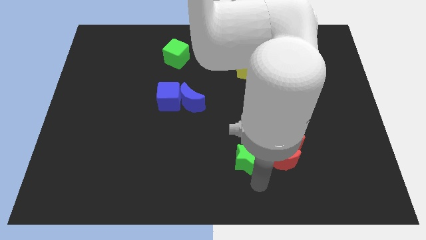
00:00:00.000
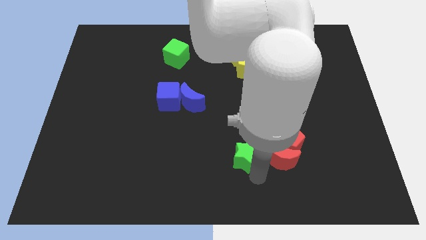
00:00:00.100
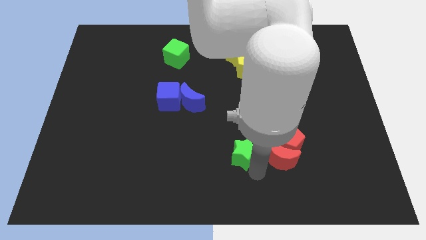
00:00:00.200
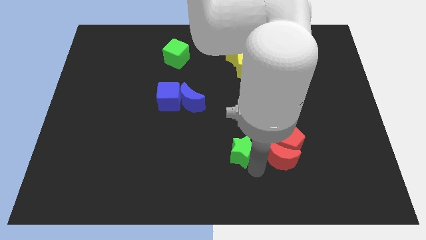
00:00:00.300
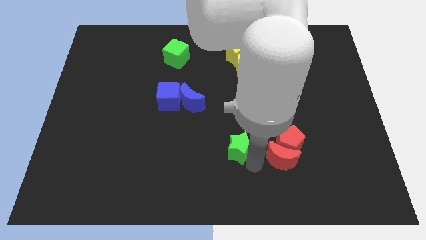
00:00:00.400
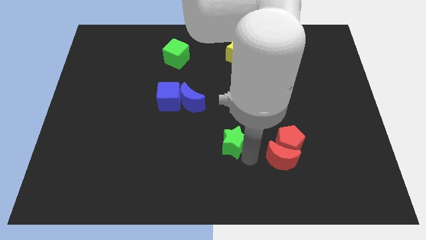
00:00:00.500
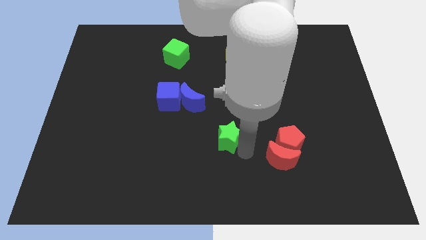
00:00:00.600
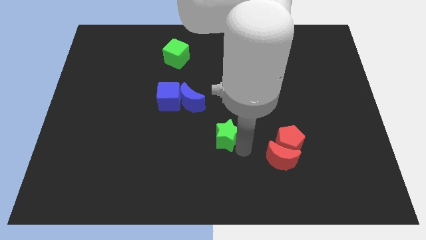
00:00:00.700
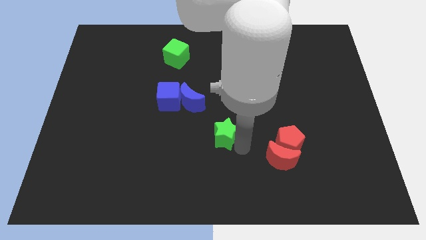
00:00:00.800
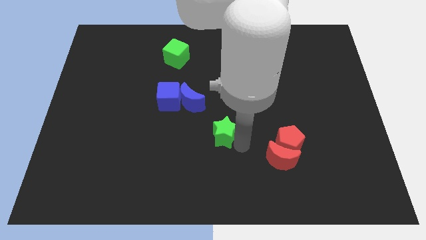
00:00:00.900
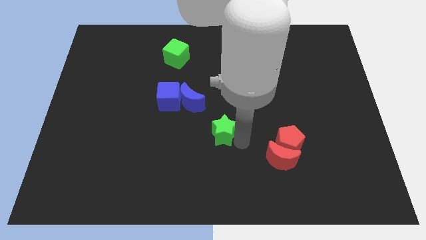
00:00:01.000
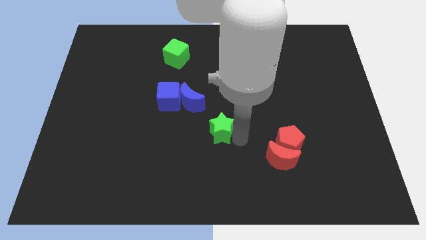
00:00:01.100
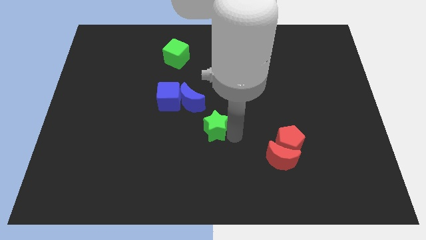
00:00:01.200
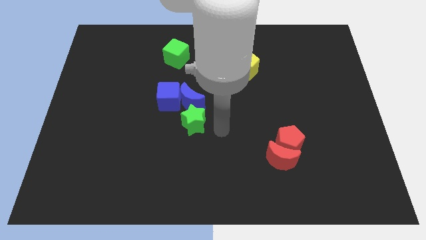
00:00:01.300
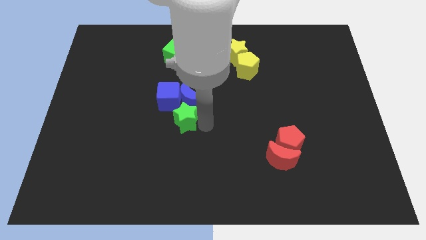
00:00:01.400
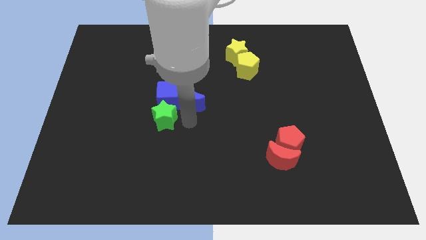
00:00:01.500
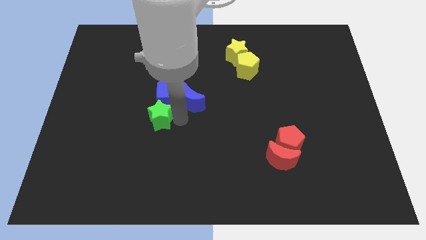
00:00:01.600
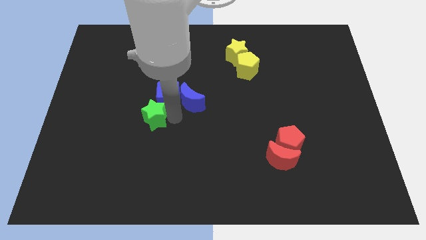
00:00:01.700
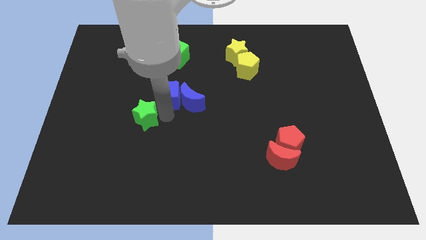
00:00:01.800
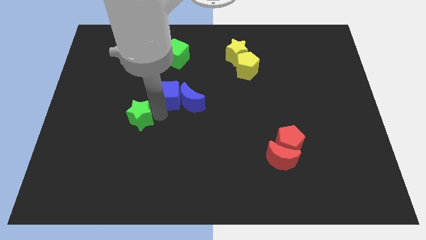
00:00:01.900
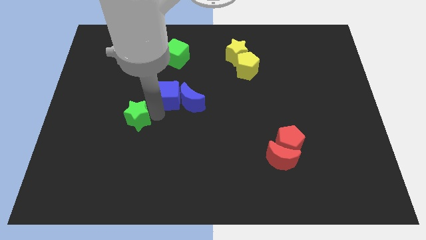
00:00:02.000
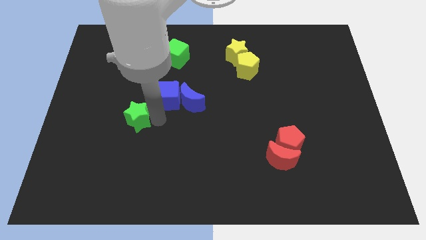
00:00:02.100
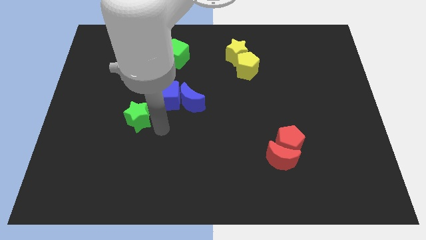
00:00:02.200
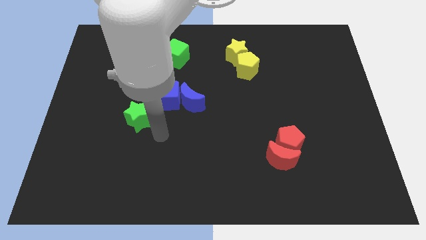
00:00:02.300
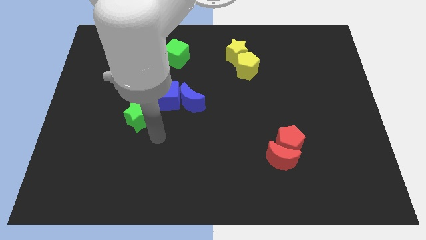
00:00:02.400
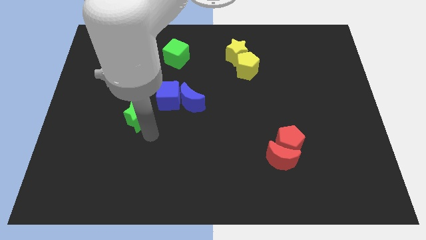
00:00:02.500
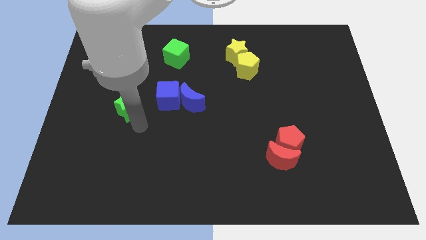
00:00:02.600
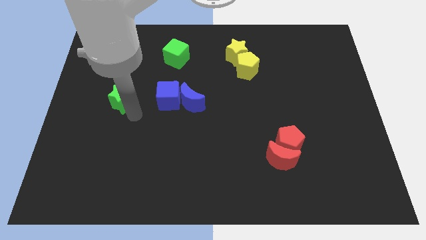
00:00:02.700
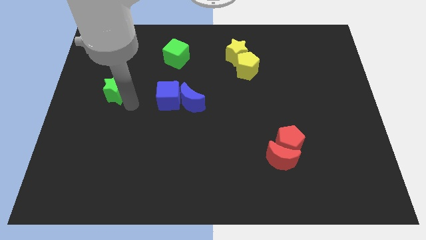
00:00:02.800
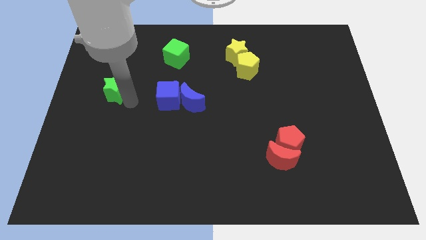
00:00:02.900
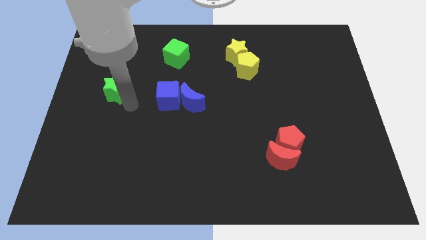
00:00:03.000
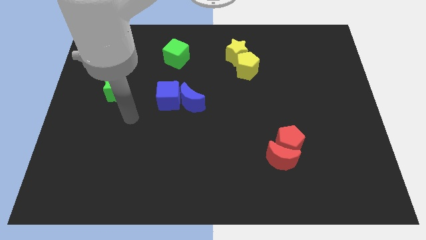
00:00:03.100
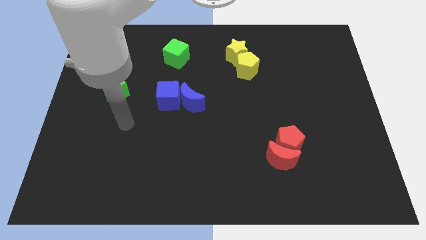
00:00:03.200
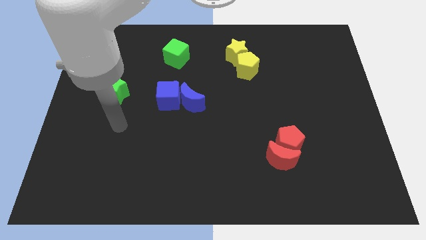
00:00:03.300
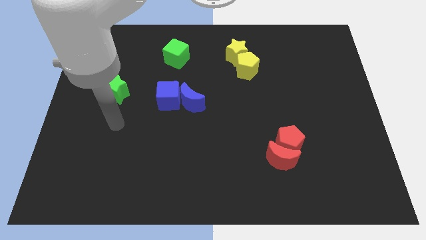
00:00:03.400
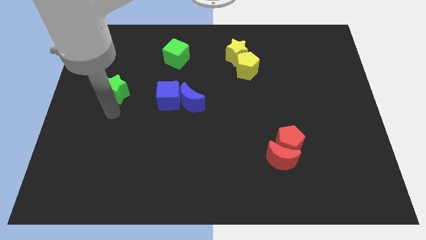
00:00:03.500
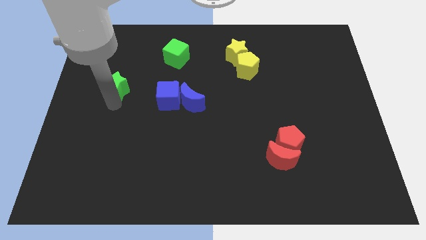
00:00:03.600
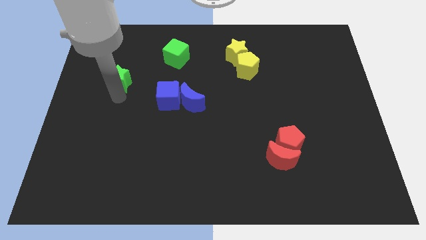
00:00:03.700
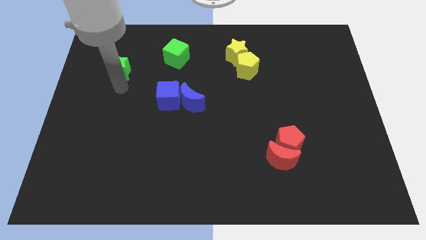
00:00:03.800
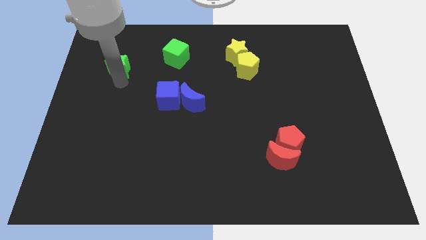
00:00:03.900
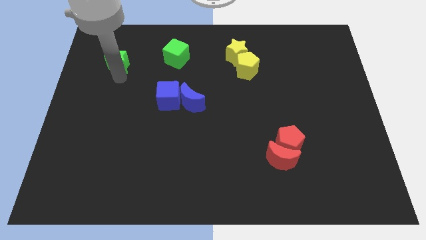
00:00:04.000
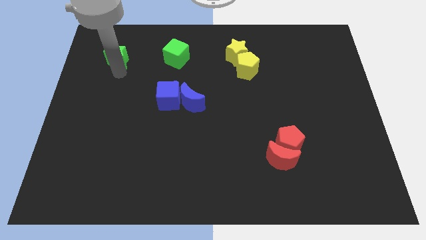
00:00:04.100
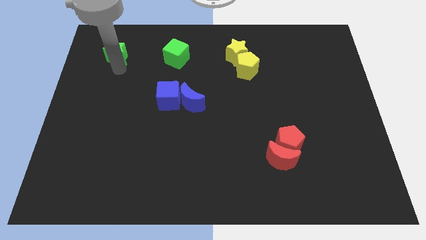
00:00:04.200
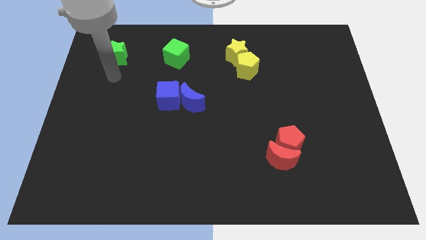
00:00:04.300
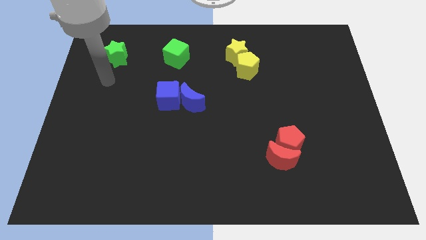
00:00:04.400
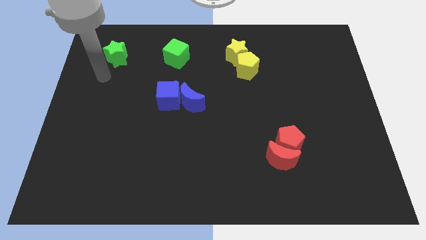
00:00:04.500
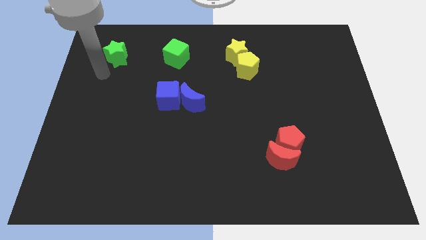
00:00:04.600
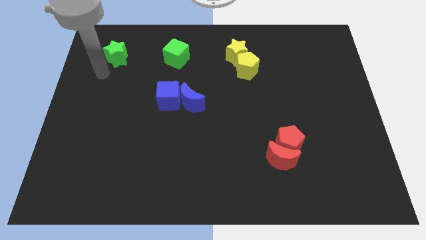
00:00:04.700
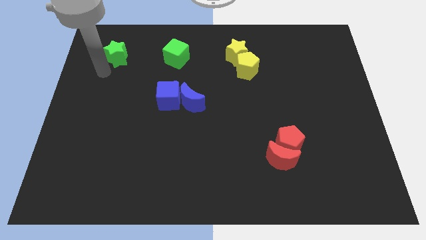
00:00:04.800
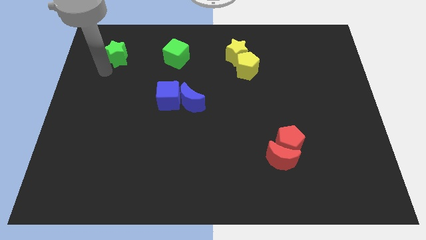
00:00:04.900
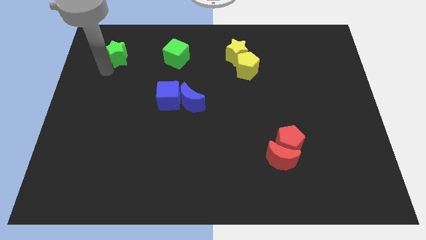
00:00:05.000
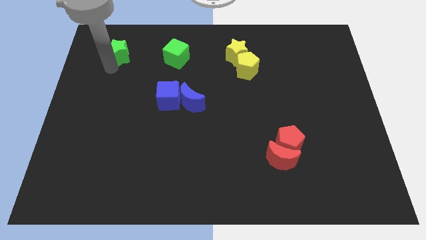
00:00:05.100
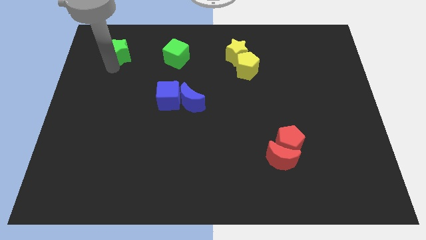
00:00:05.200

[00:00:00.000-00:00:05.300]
push green start towards the right side of the green cube

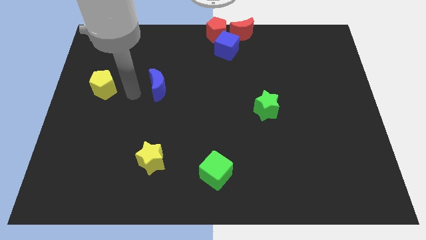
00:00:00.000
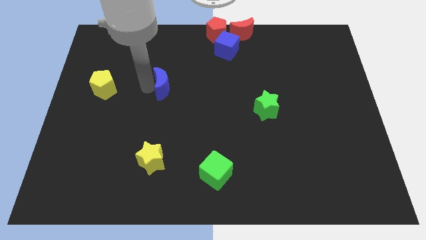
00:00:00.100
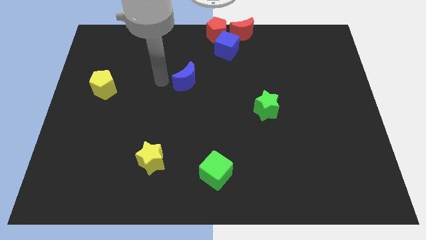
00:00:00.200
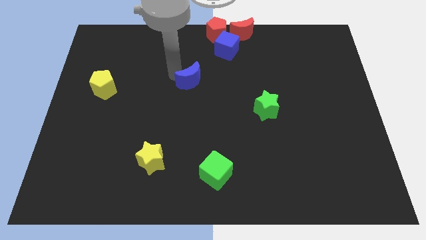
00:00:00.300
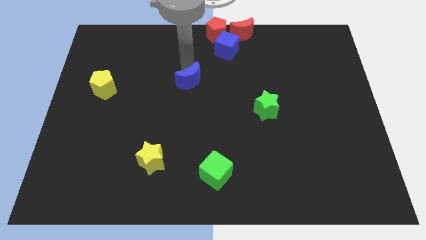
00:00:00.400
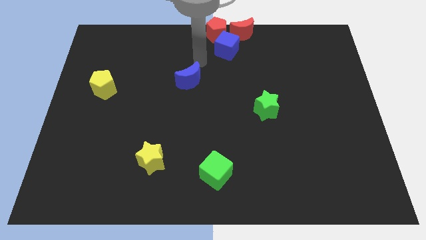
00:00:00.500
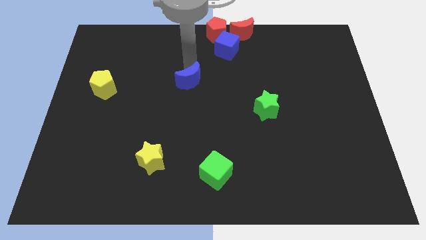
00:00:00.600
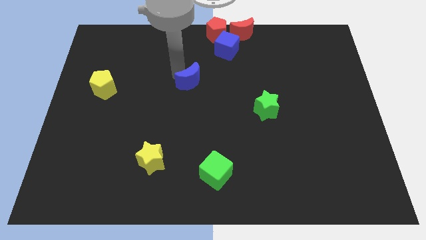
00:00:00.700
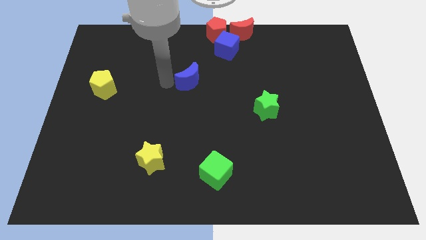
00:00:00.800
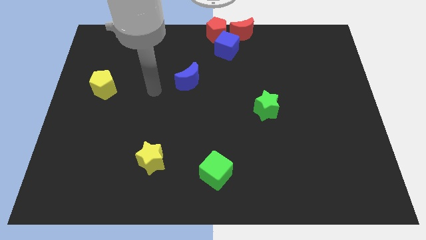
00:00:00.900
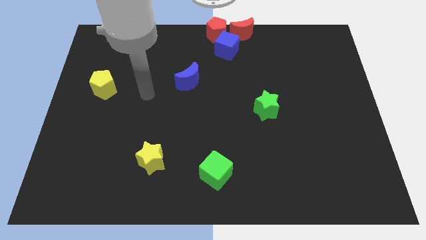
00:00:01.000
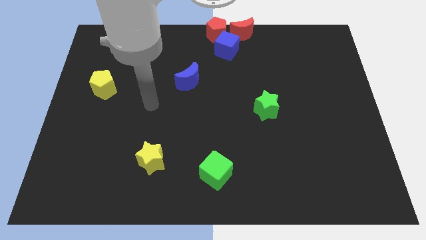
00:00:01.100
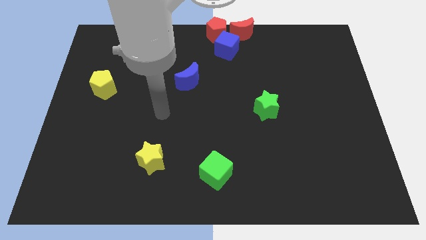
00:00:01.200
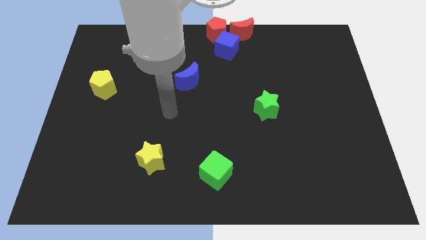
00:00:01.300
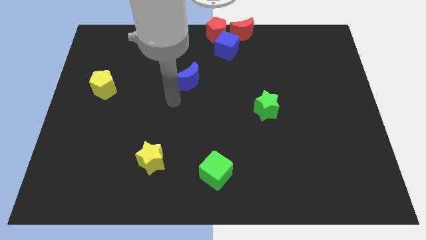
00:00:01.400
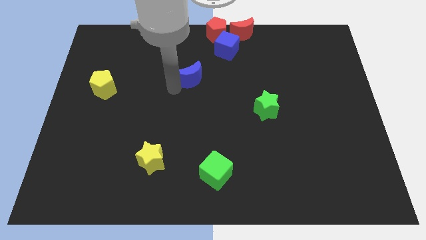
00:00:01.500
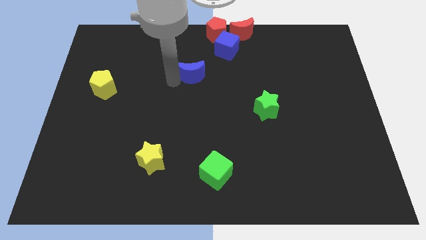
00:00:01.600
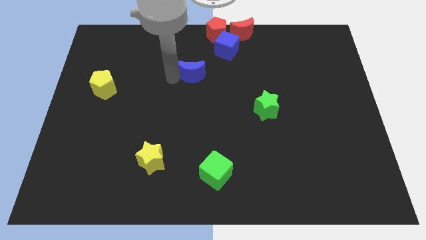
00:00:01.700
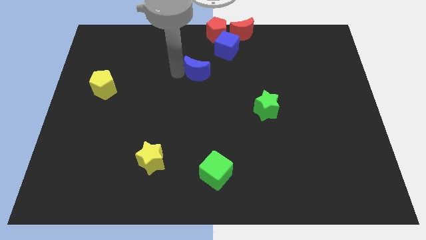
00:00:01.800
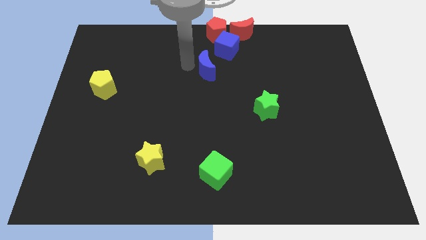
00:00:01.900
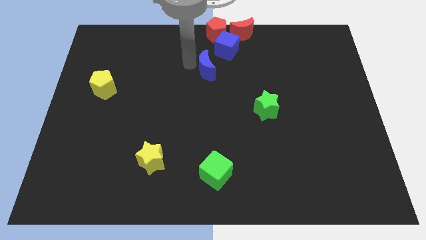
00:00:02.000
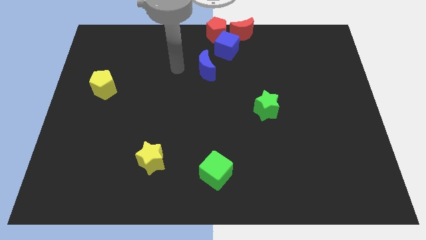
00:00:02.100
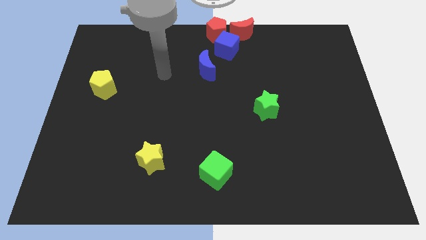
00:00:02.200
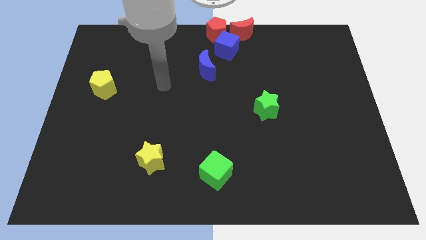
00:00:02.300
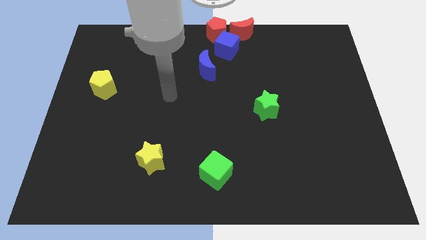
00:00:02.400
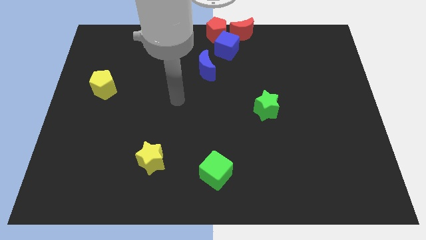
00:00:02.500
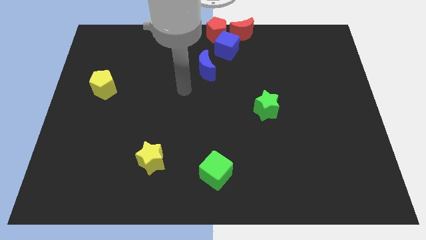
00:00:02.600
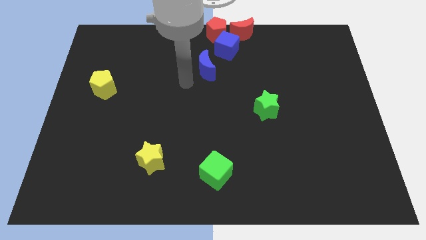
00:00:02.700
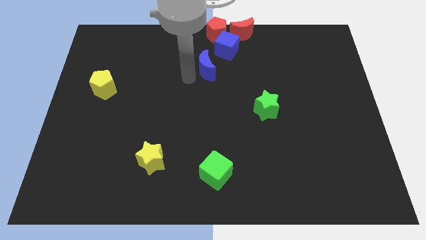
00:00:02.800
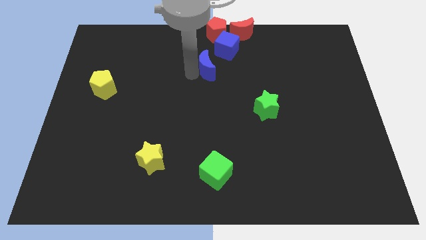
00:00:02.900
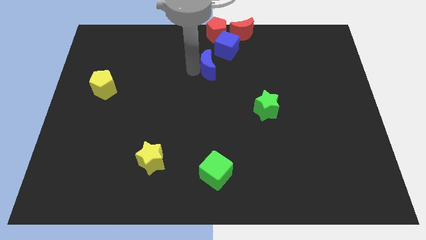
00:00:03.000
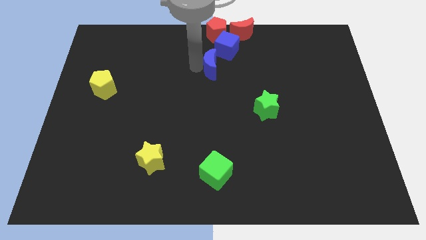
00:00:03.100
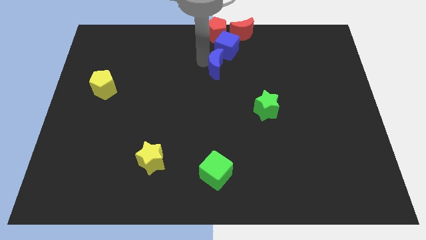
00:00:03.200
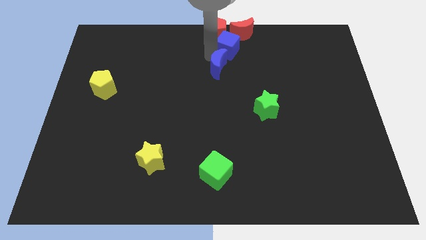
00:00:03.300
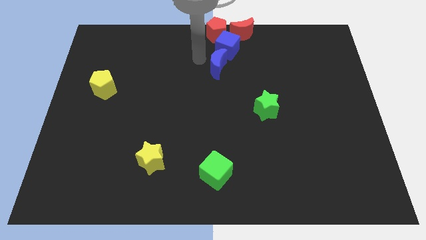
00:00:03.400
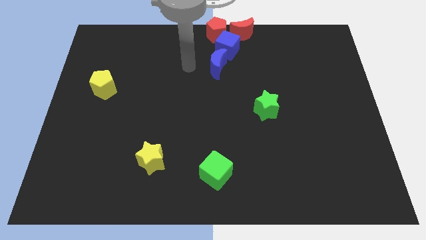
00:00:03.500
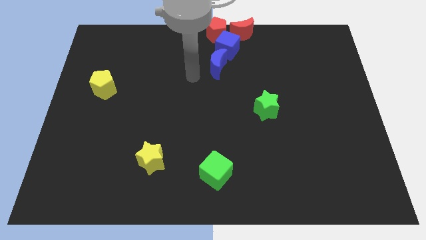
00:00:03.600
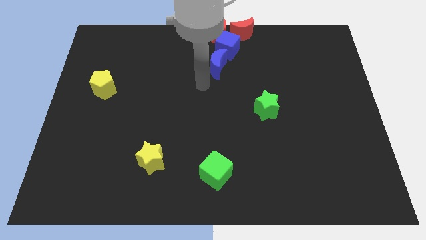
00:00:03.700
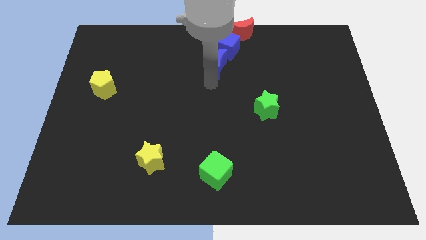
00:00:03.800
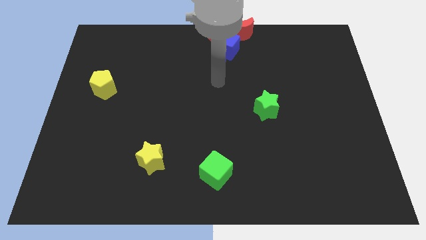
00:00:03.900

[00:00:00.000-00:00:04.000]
place the blue moon under the blue cube
